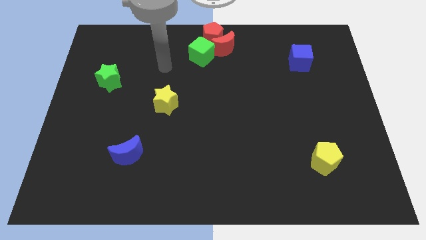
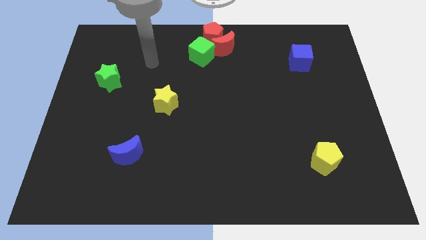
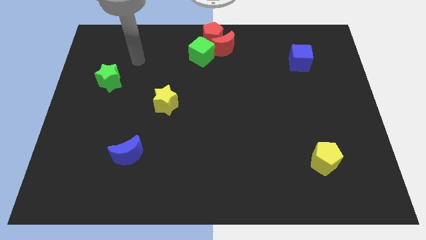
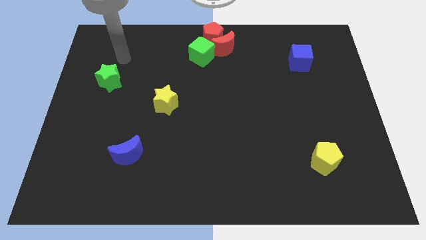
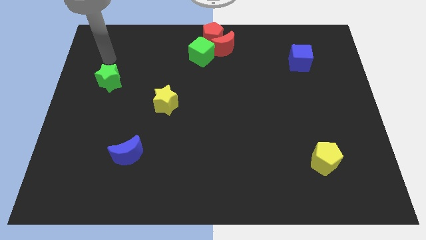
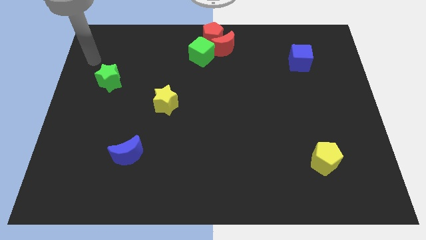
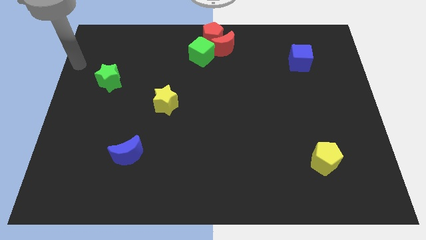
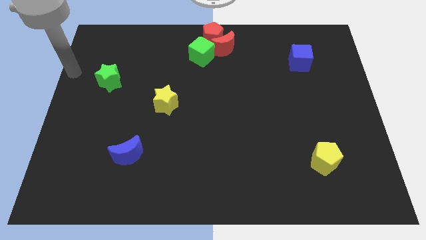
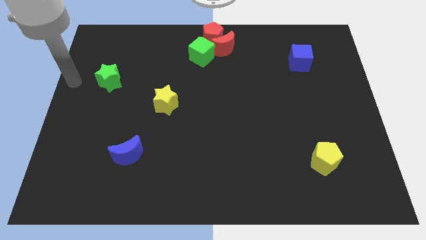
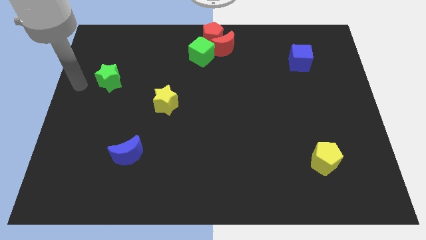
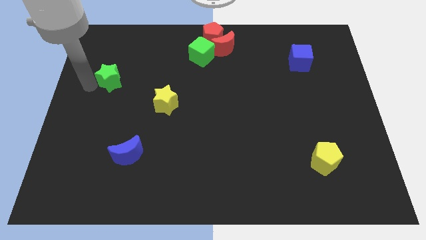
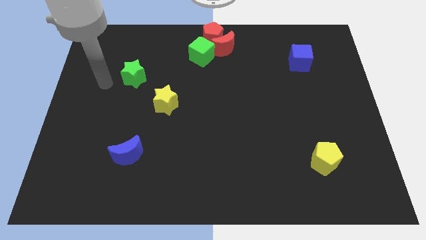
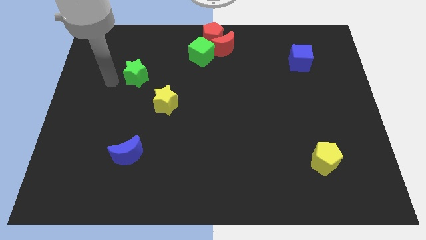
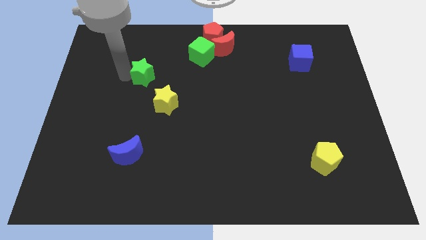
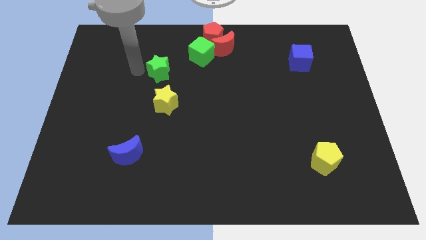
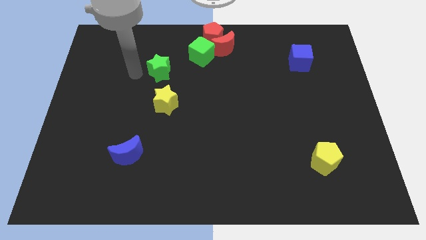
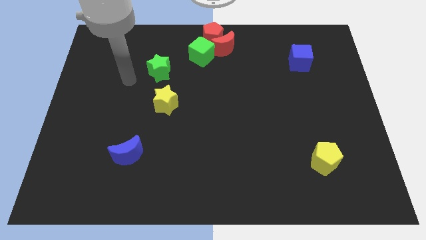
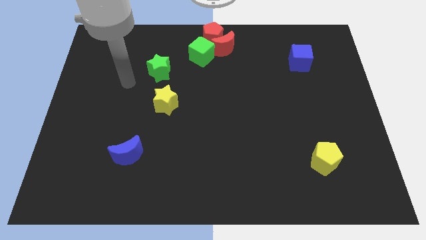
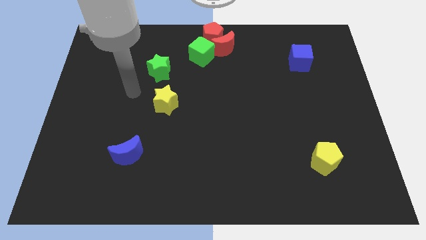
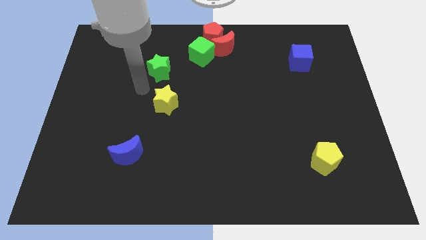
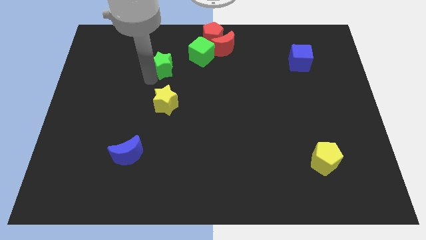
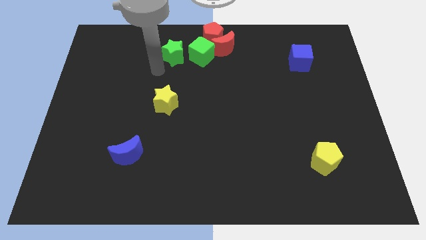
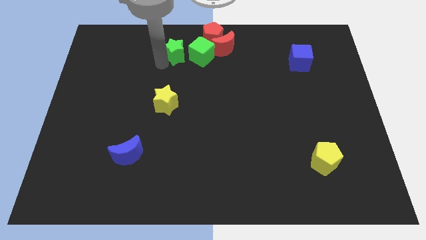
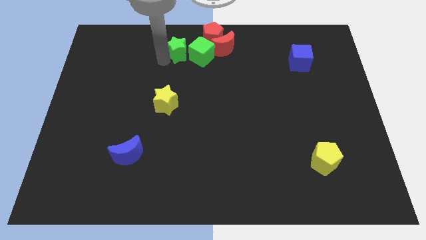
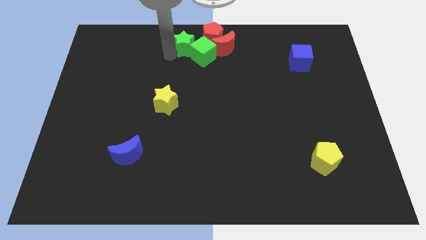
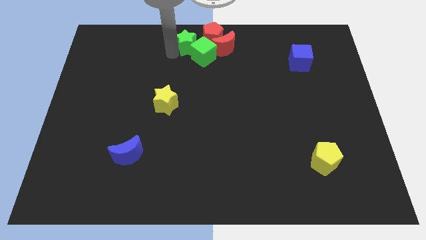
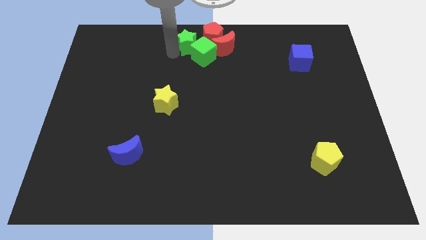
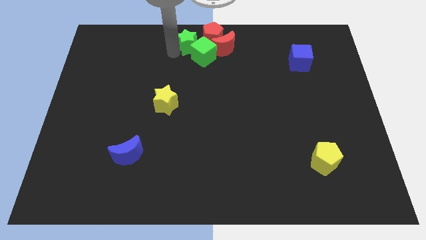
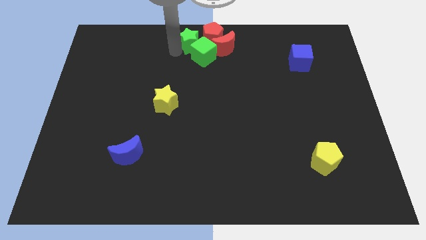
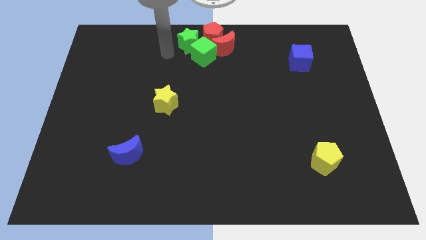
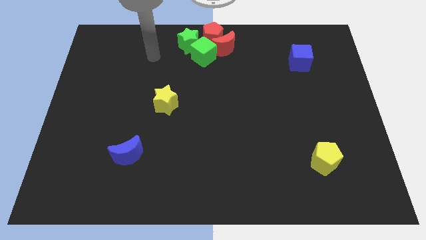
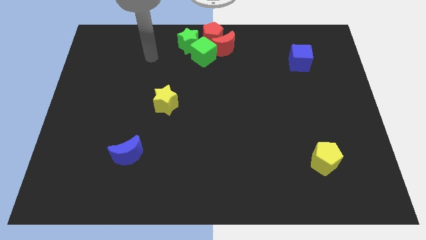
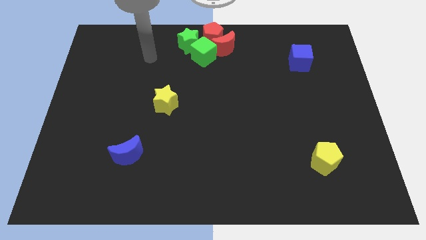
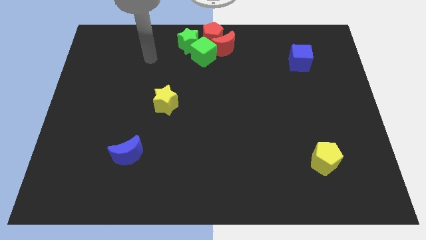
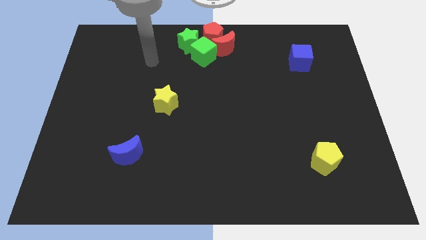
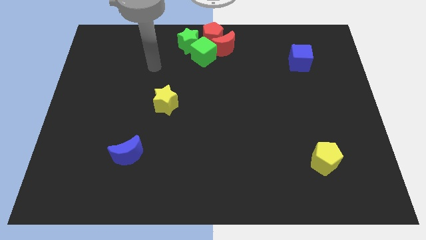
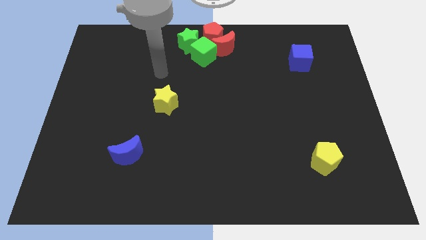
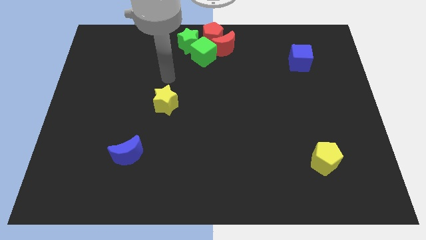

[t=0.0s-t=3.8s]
move green star left above green cube

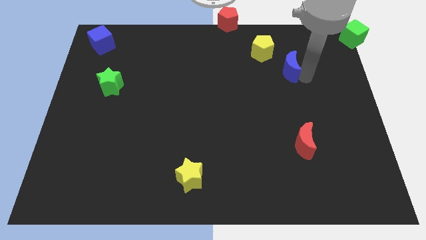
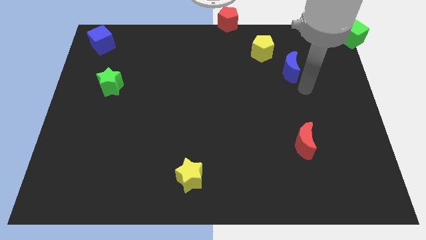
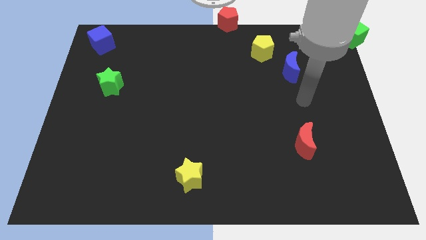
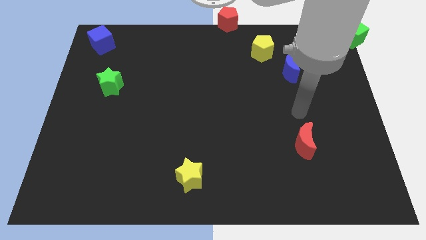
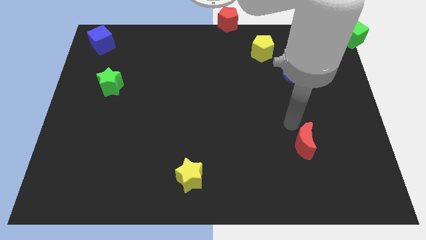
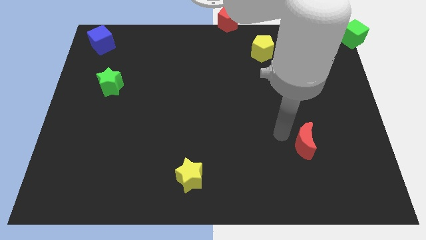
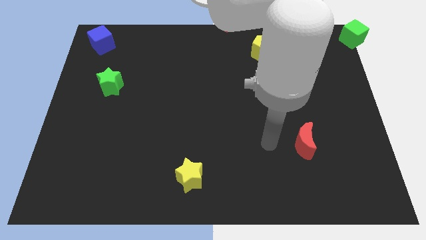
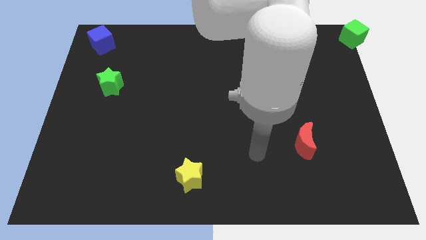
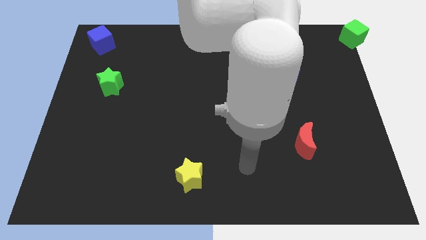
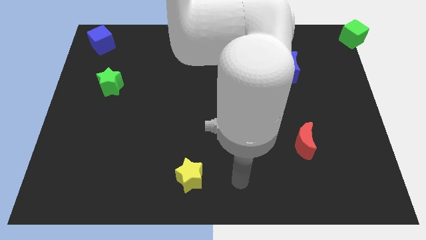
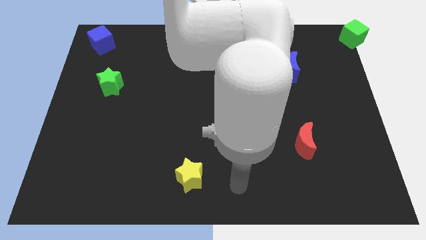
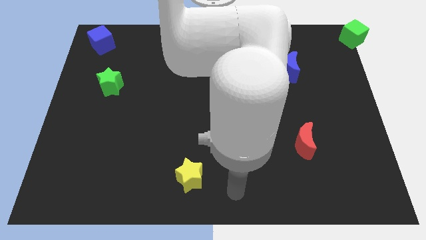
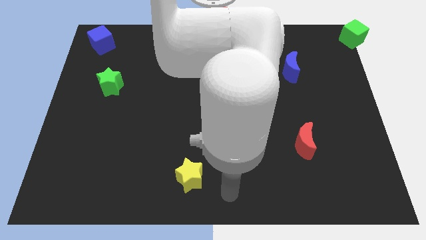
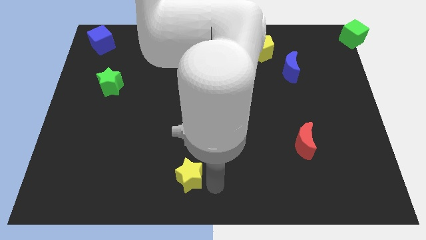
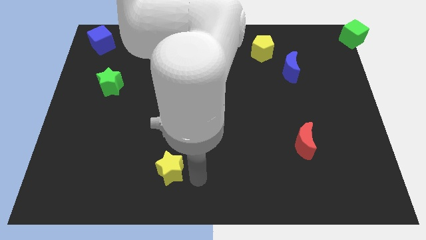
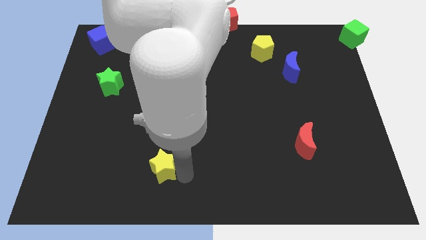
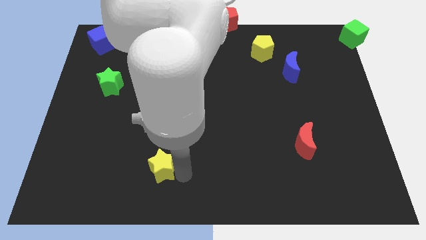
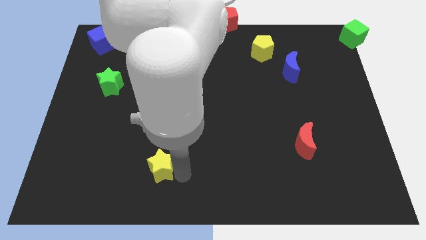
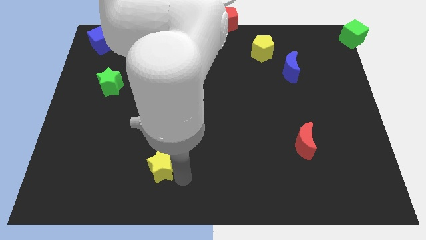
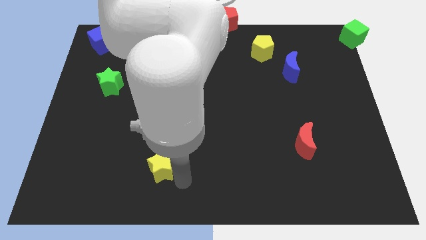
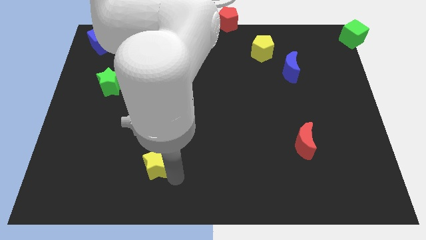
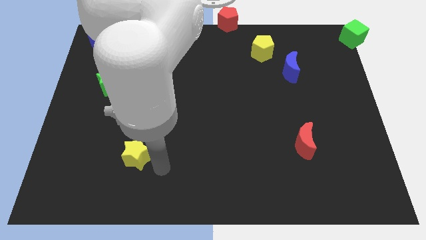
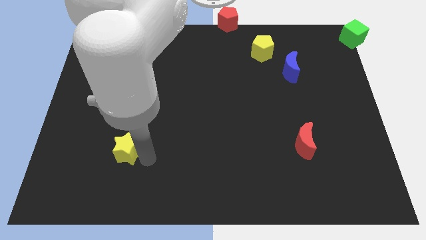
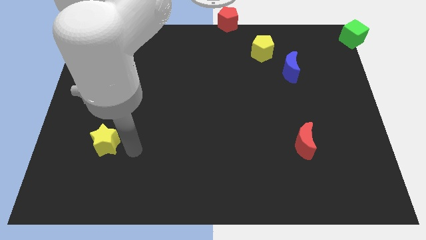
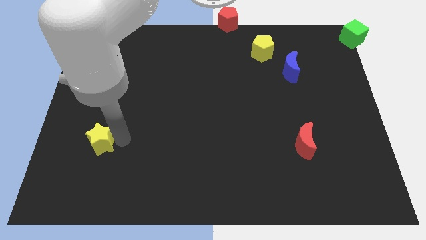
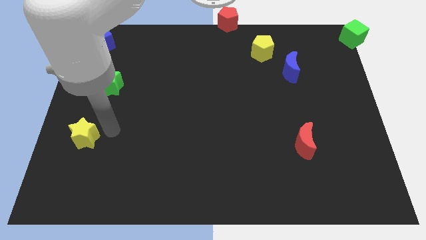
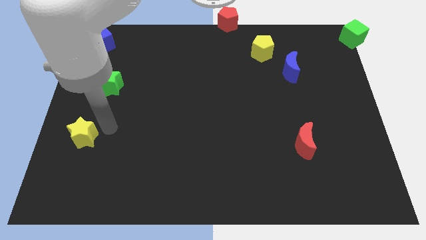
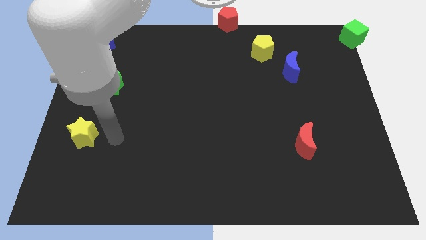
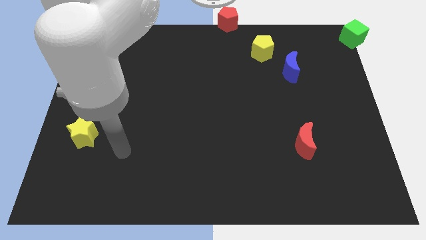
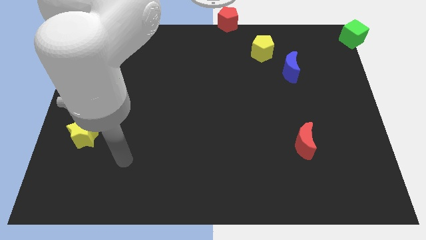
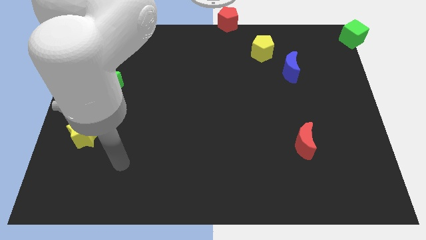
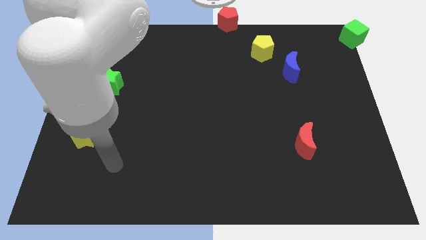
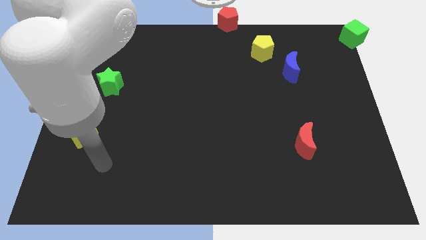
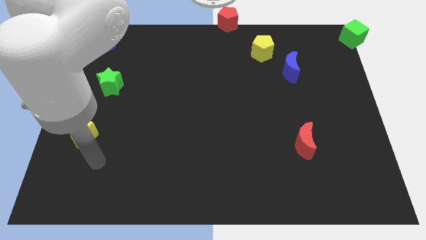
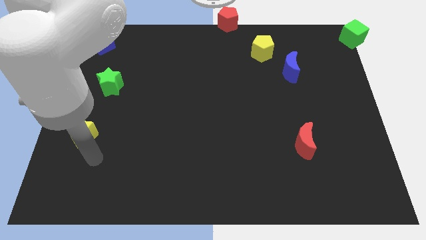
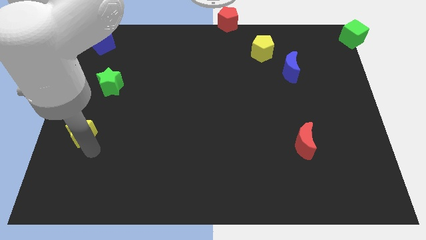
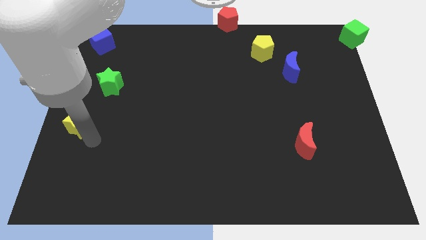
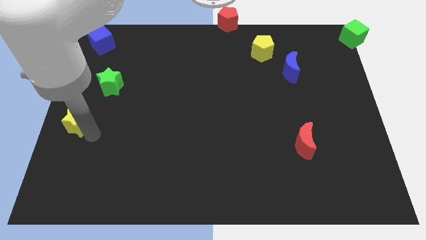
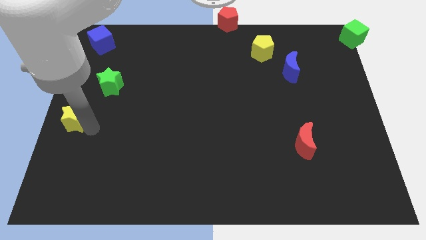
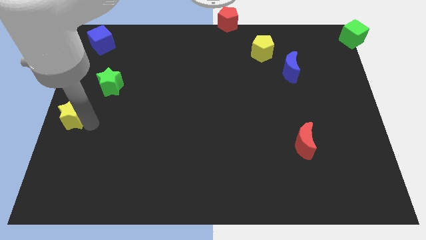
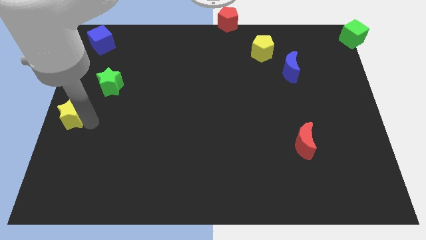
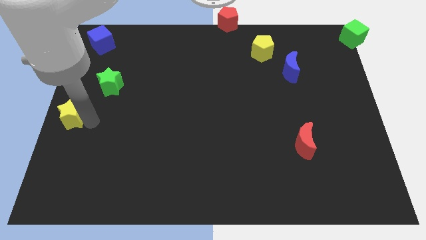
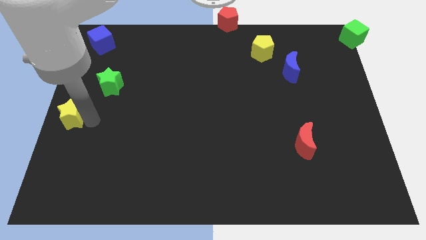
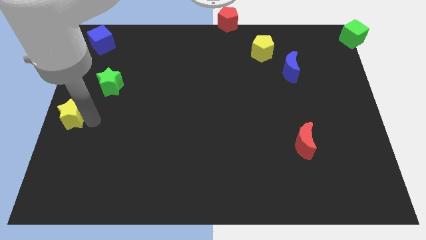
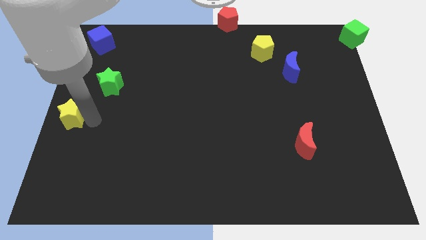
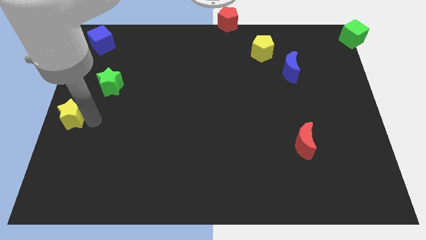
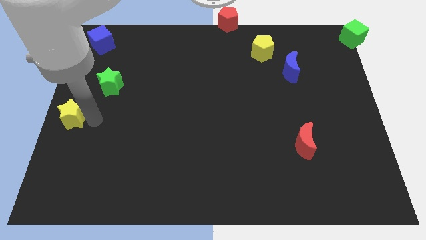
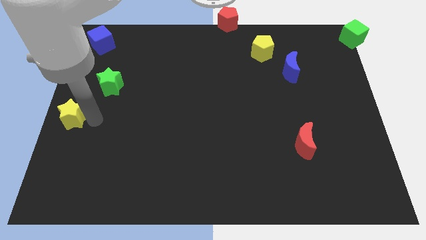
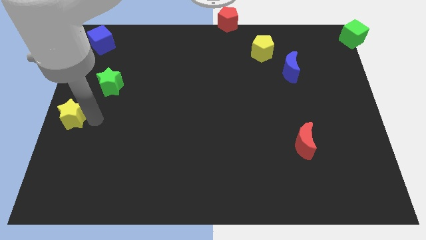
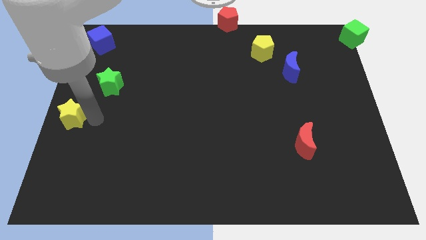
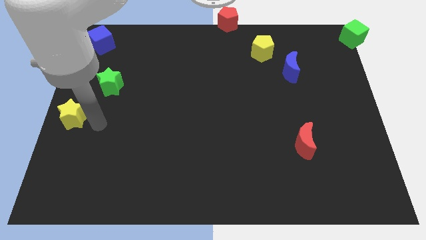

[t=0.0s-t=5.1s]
move the yellow star to the bottom left of the green star
